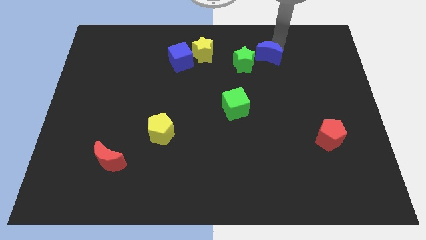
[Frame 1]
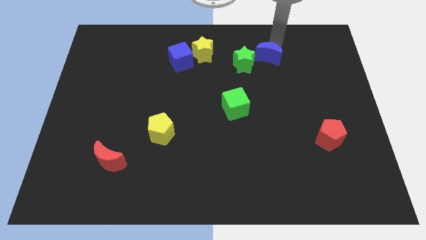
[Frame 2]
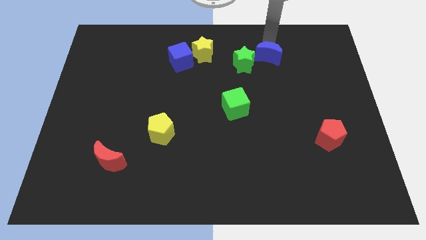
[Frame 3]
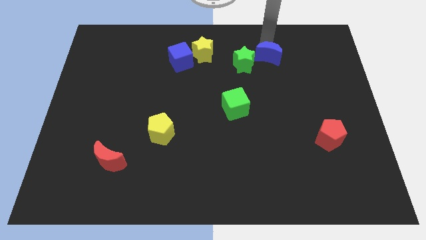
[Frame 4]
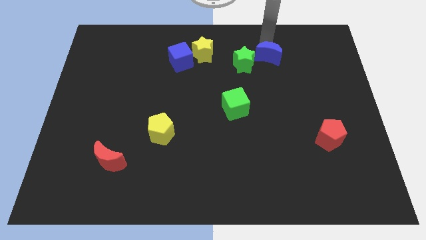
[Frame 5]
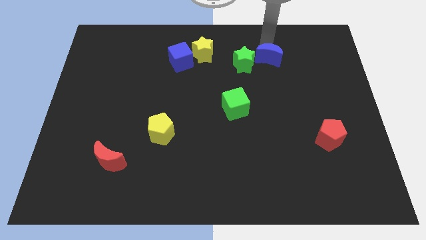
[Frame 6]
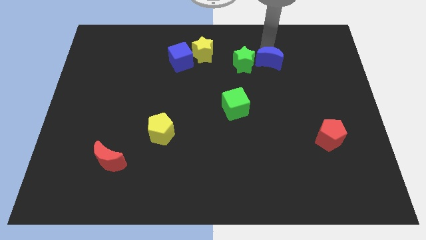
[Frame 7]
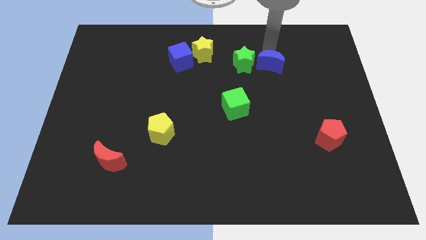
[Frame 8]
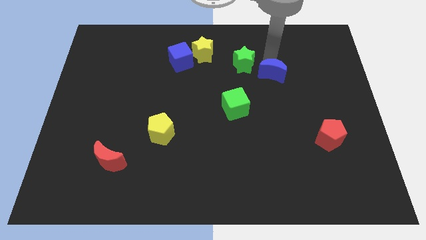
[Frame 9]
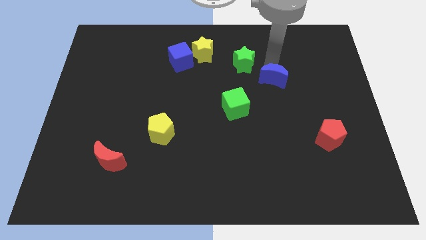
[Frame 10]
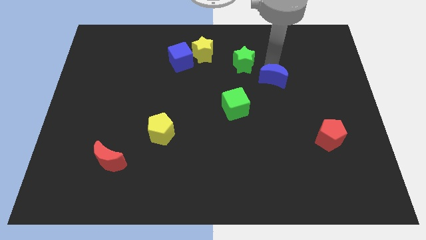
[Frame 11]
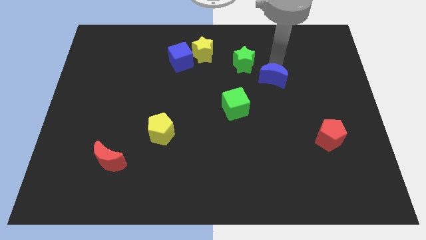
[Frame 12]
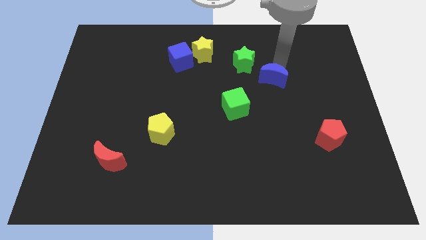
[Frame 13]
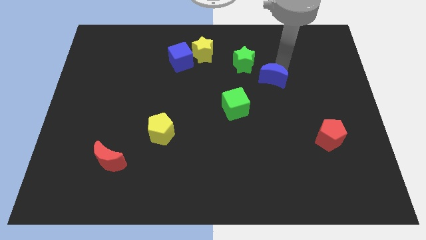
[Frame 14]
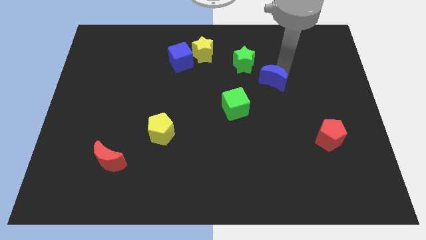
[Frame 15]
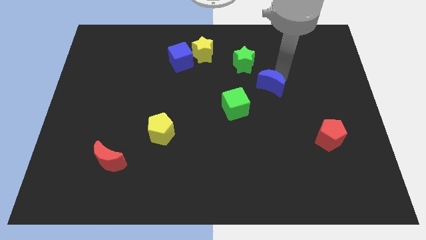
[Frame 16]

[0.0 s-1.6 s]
move blue moon away from green star

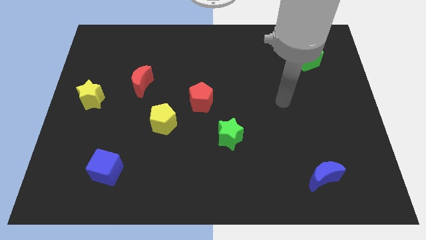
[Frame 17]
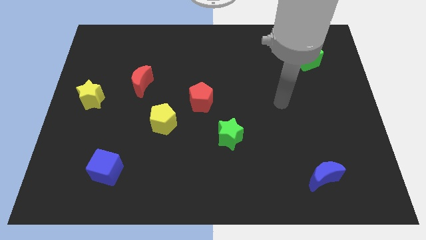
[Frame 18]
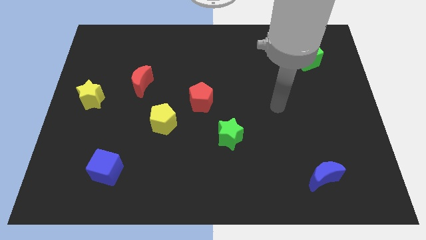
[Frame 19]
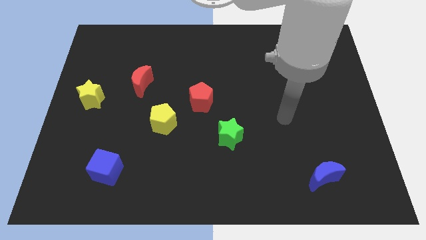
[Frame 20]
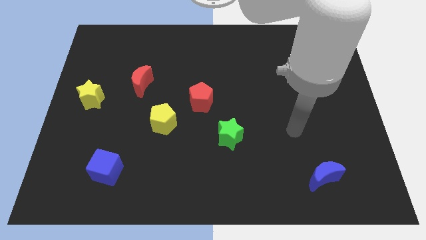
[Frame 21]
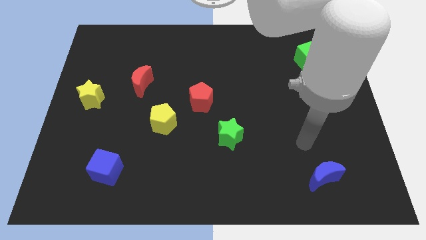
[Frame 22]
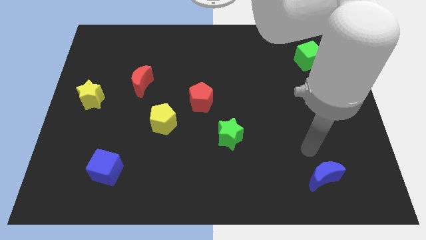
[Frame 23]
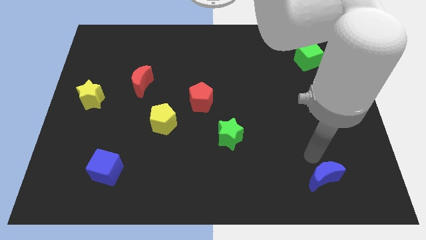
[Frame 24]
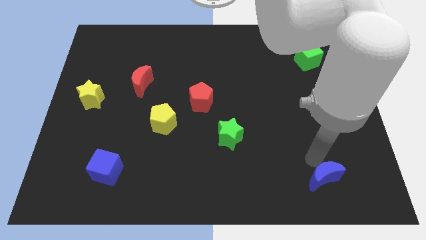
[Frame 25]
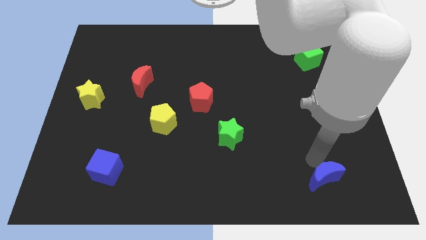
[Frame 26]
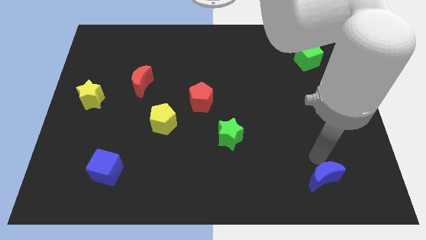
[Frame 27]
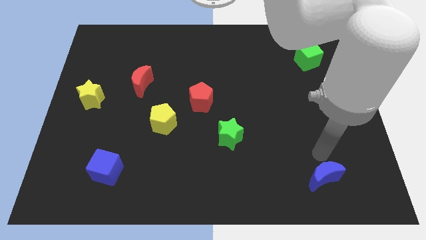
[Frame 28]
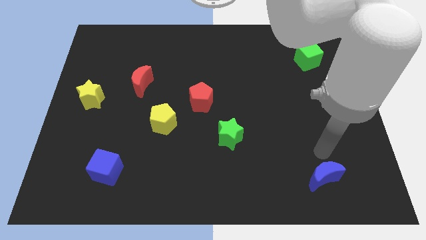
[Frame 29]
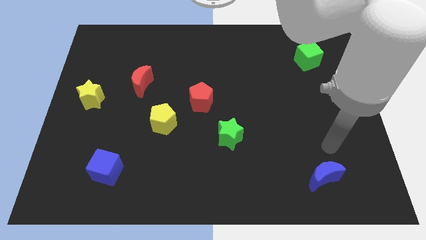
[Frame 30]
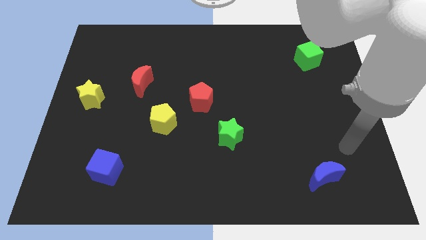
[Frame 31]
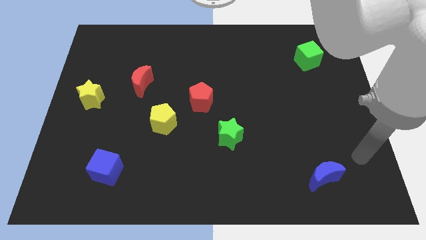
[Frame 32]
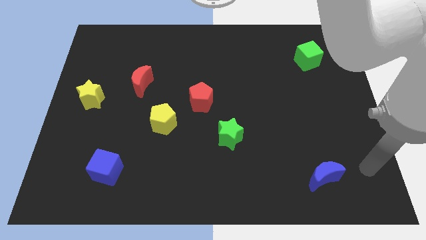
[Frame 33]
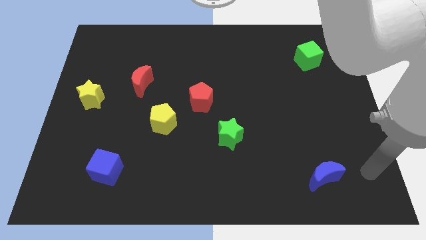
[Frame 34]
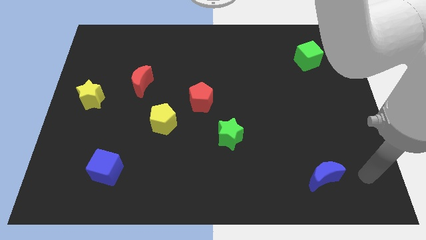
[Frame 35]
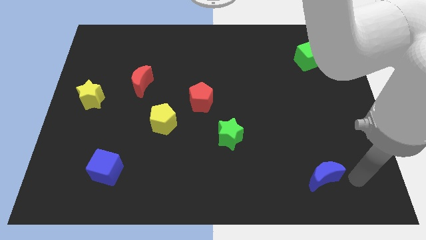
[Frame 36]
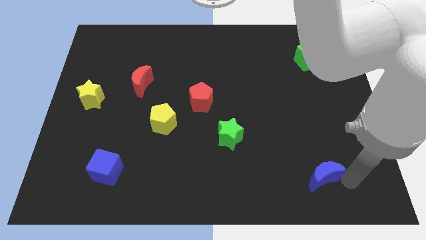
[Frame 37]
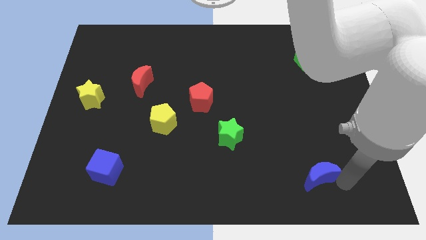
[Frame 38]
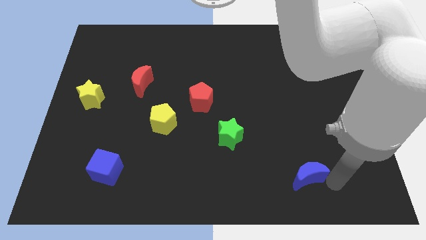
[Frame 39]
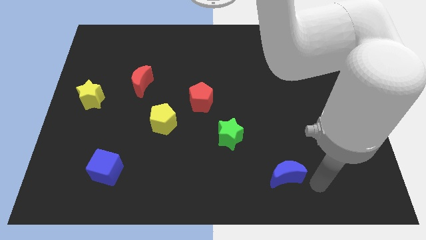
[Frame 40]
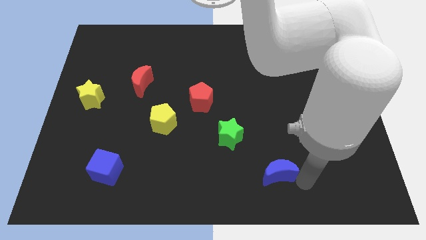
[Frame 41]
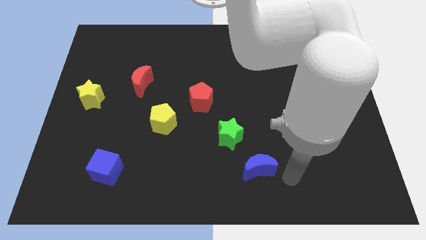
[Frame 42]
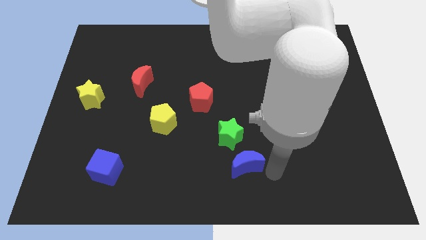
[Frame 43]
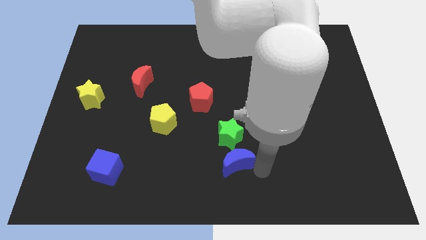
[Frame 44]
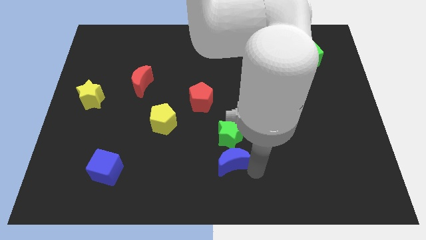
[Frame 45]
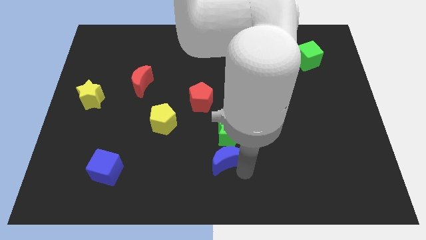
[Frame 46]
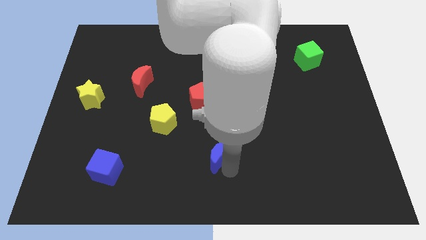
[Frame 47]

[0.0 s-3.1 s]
push the blue crescent below the green star

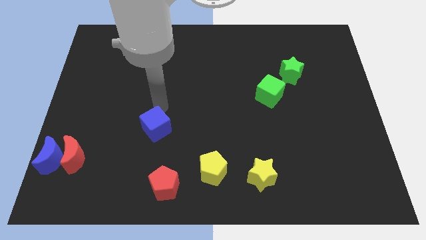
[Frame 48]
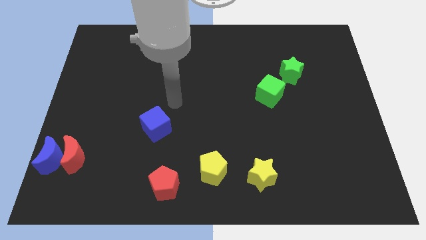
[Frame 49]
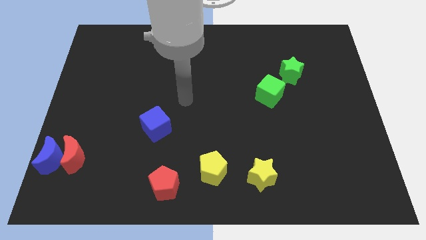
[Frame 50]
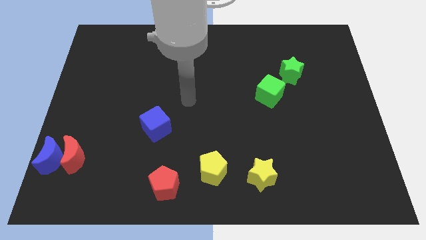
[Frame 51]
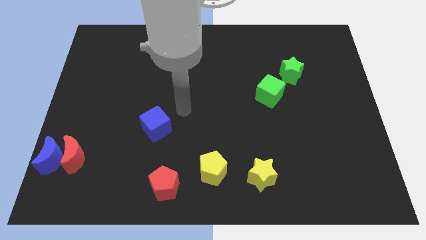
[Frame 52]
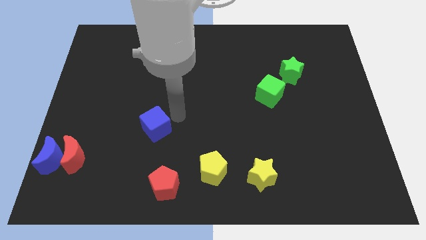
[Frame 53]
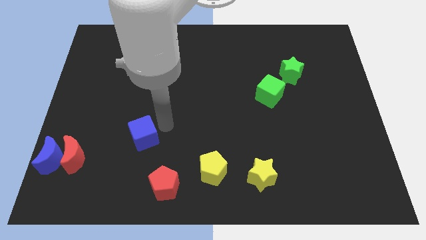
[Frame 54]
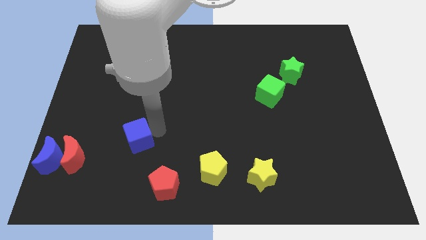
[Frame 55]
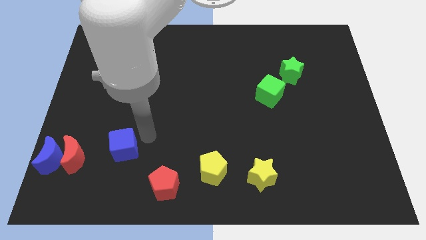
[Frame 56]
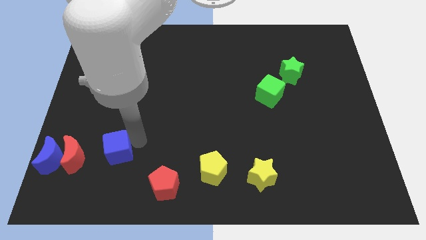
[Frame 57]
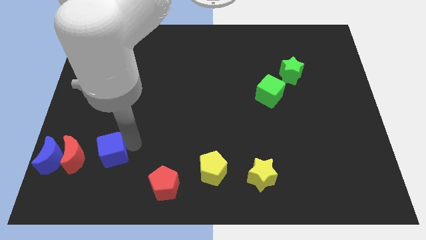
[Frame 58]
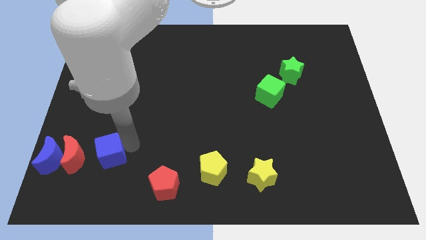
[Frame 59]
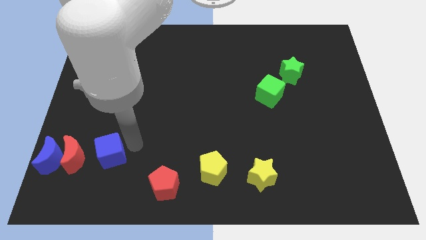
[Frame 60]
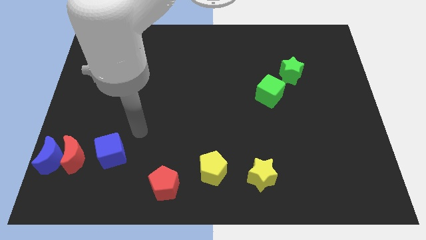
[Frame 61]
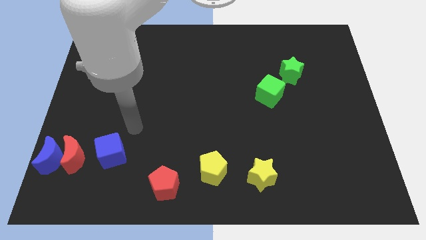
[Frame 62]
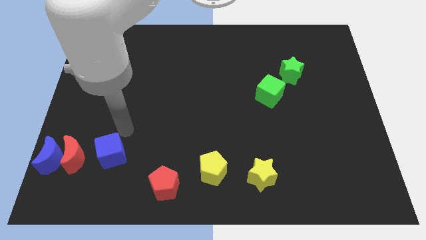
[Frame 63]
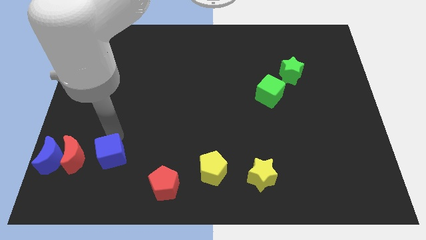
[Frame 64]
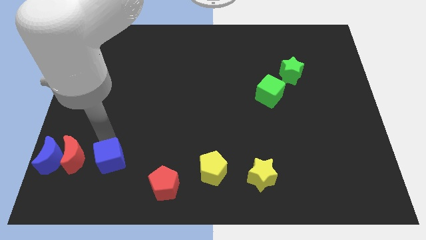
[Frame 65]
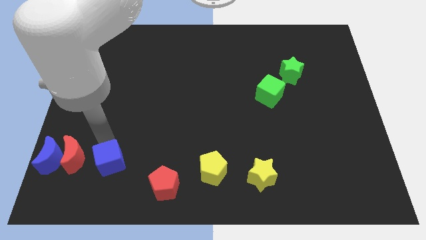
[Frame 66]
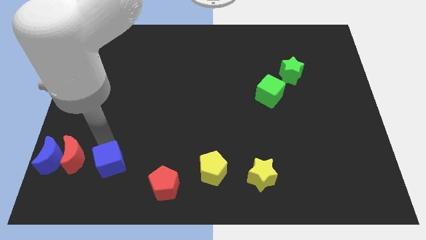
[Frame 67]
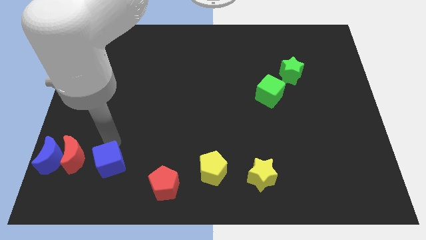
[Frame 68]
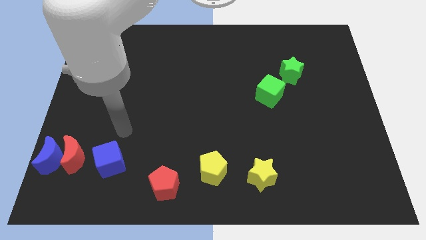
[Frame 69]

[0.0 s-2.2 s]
move the blue cube right to the red moon

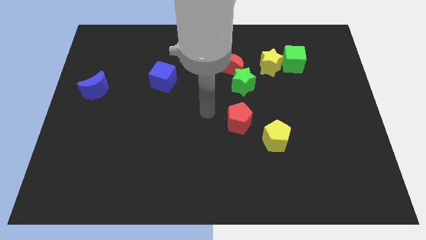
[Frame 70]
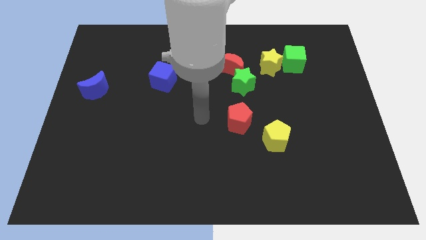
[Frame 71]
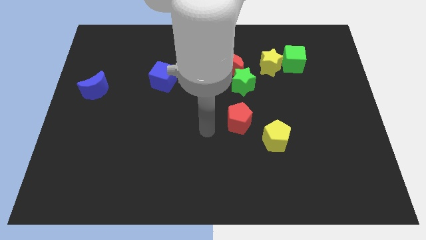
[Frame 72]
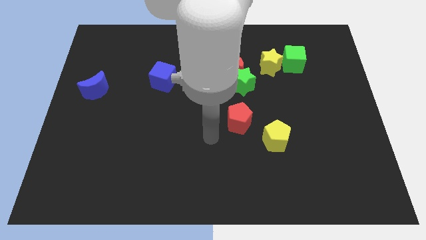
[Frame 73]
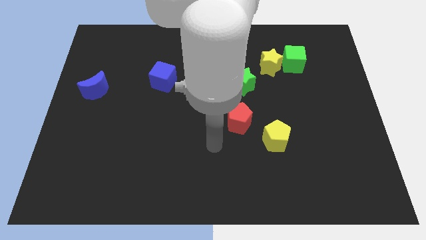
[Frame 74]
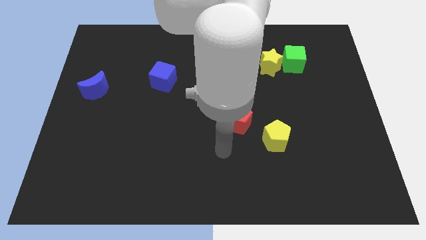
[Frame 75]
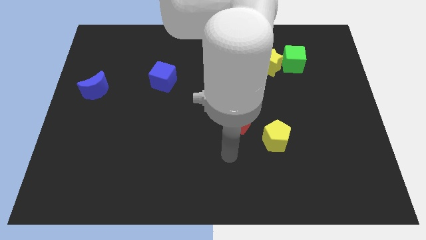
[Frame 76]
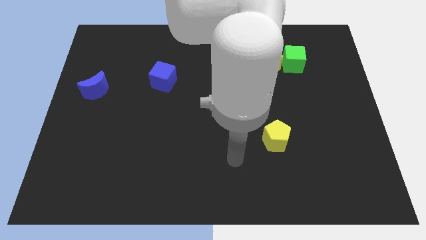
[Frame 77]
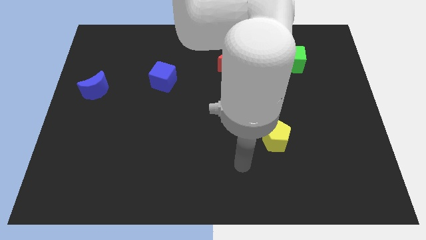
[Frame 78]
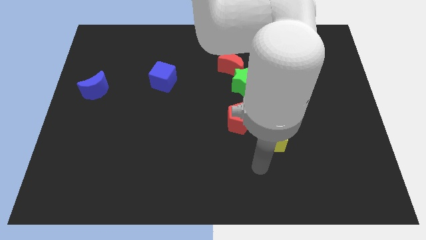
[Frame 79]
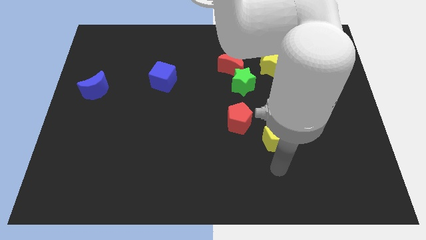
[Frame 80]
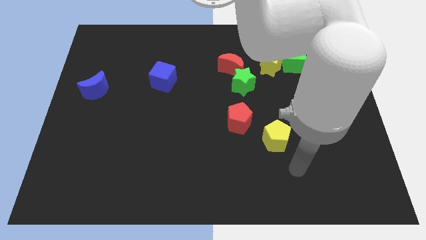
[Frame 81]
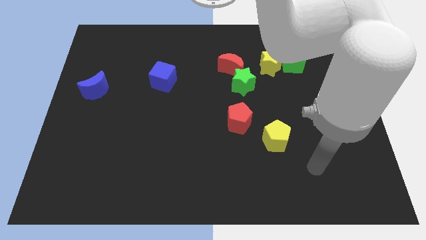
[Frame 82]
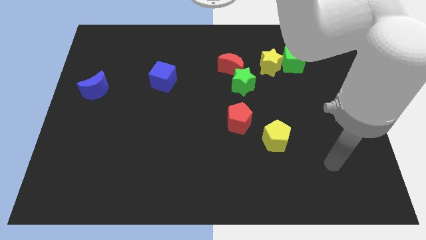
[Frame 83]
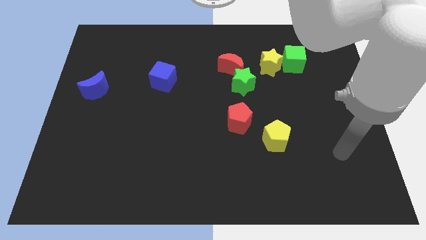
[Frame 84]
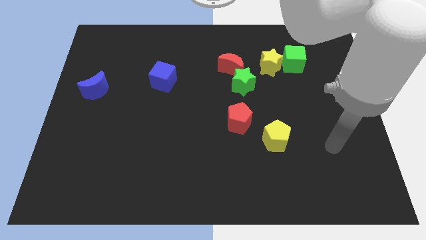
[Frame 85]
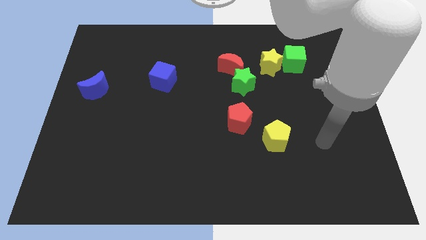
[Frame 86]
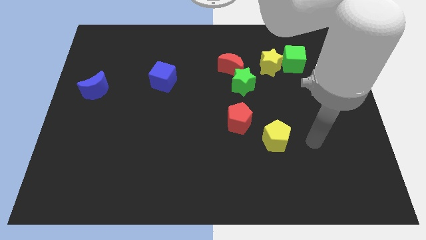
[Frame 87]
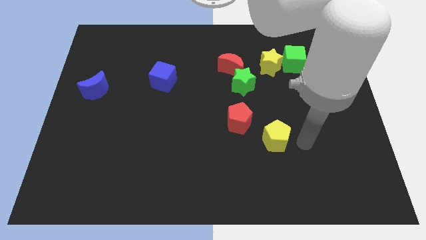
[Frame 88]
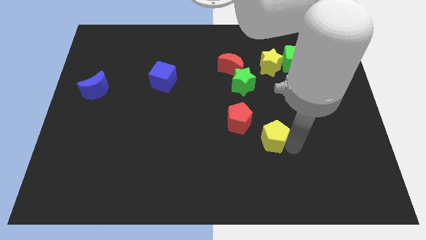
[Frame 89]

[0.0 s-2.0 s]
place your arm to the right side of yellow pentagon

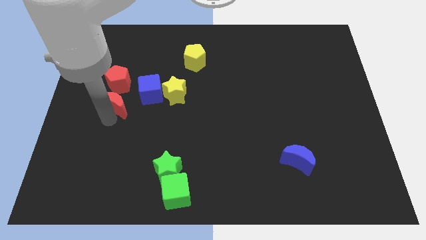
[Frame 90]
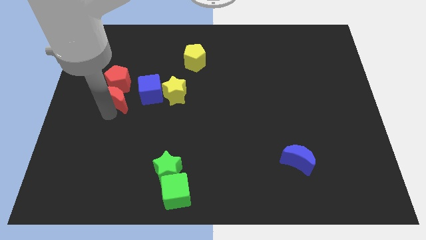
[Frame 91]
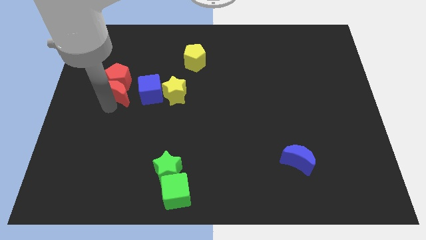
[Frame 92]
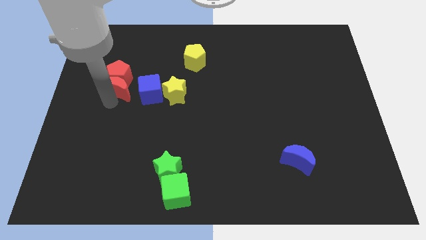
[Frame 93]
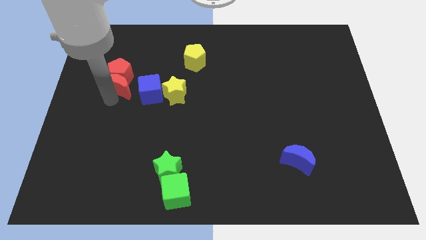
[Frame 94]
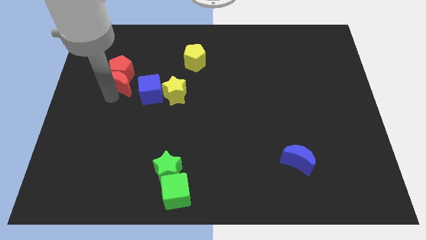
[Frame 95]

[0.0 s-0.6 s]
push red crescent into red pentagon
